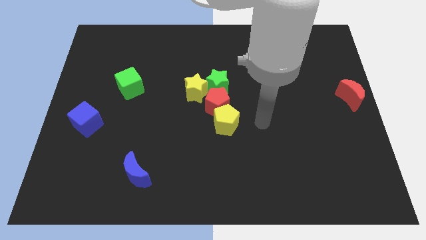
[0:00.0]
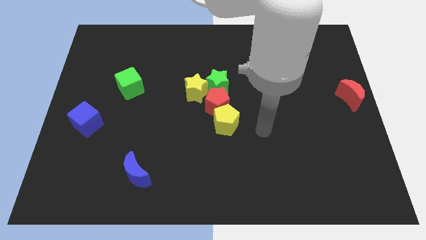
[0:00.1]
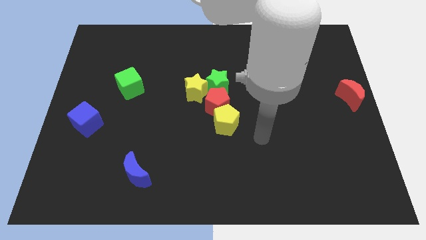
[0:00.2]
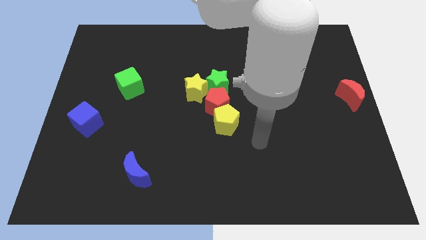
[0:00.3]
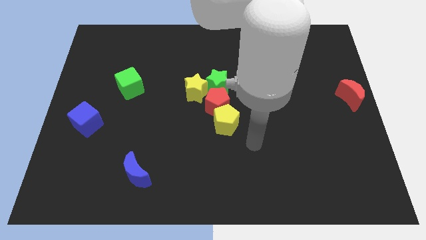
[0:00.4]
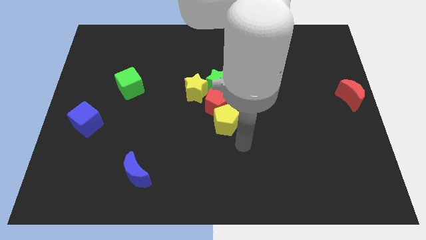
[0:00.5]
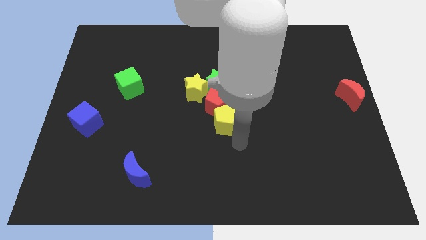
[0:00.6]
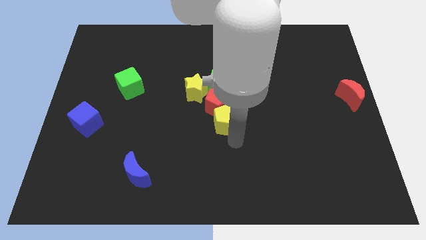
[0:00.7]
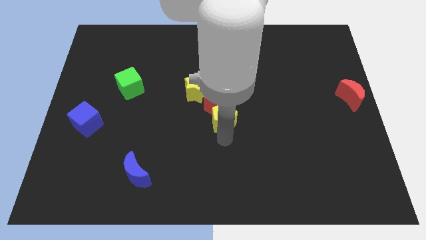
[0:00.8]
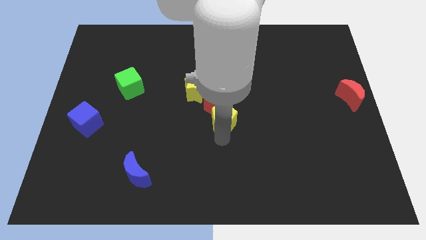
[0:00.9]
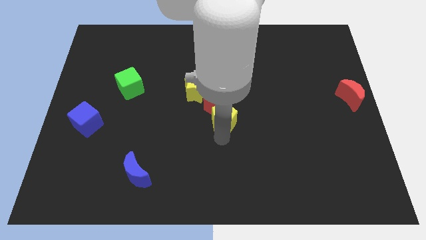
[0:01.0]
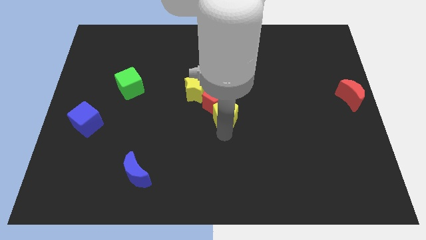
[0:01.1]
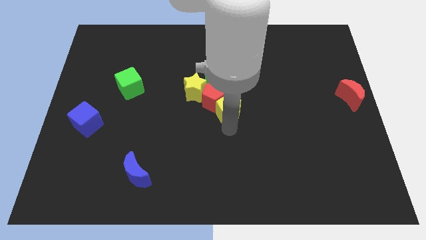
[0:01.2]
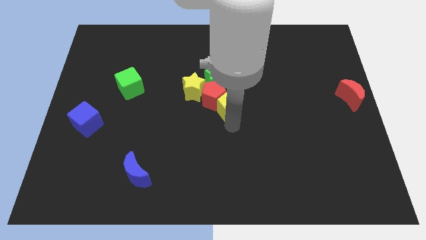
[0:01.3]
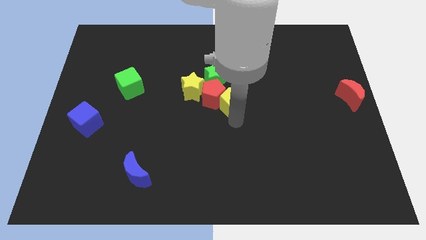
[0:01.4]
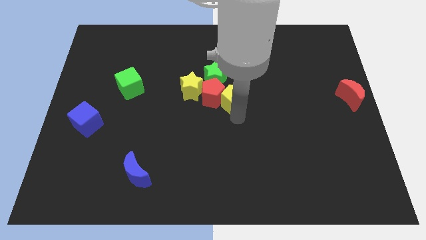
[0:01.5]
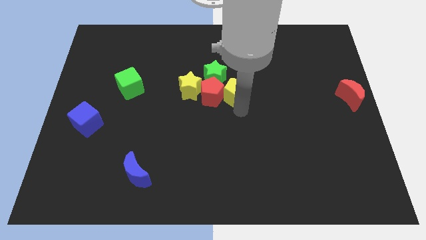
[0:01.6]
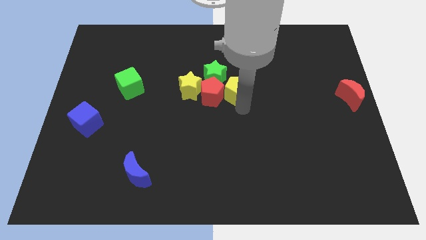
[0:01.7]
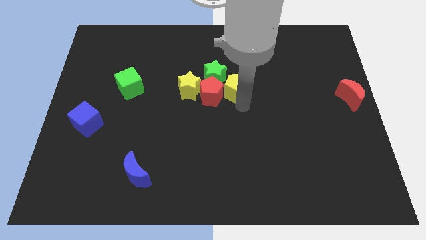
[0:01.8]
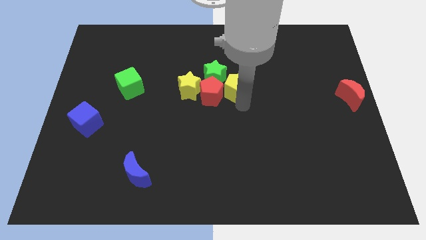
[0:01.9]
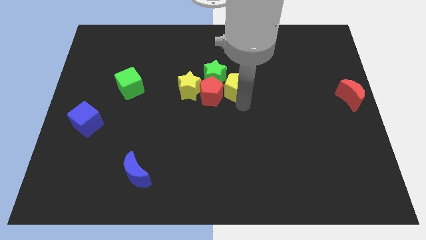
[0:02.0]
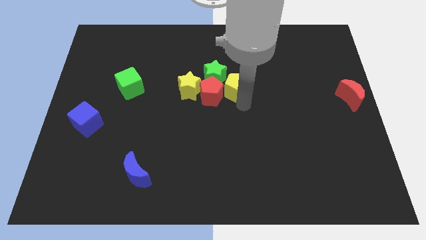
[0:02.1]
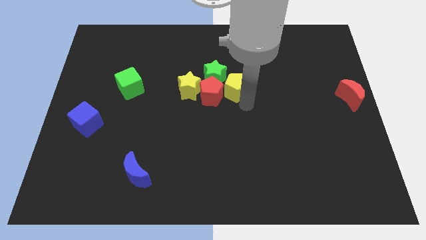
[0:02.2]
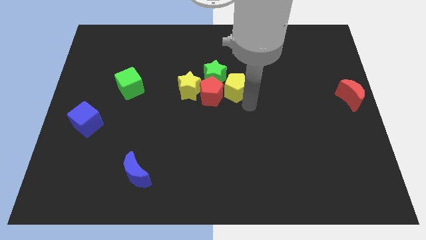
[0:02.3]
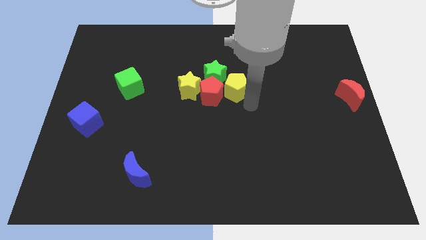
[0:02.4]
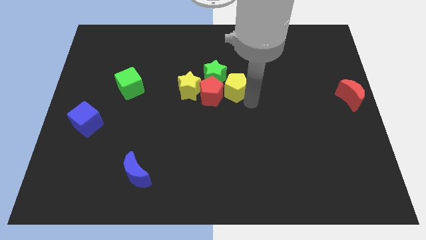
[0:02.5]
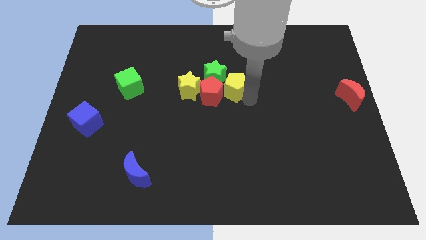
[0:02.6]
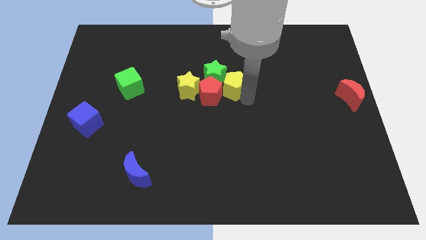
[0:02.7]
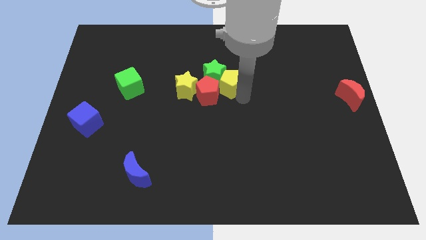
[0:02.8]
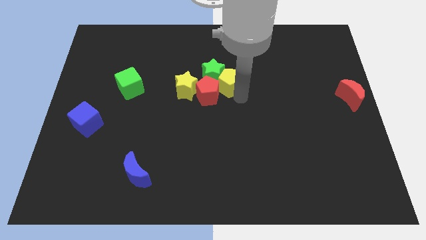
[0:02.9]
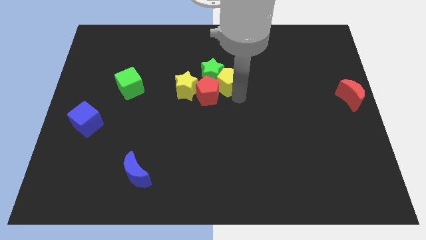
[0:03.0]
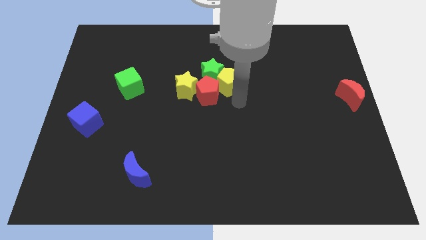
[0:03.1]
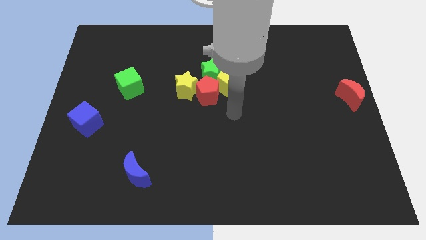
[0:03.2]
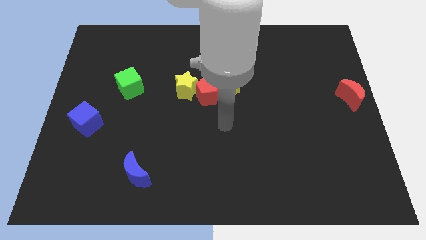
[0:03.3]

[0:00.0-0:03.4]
push the yellow pentagon to the right side of the red pentagon

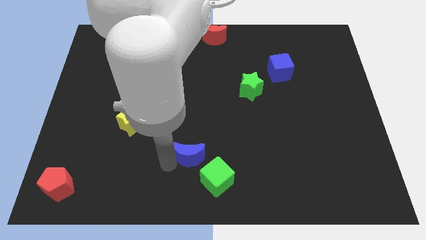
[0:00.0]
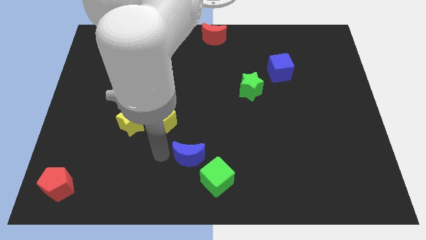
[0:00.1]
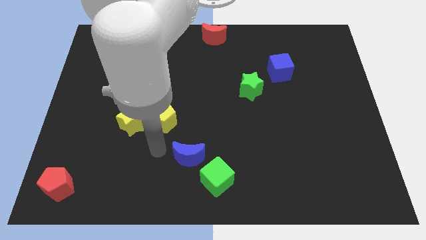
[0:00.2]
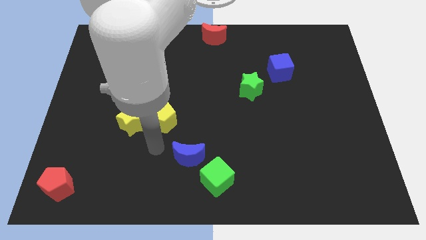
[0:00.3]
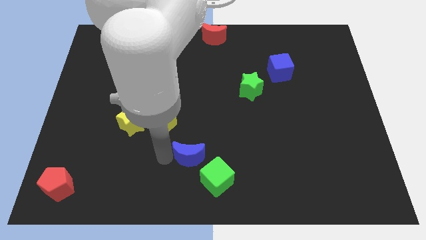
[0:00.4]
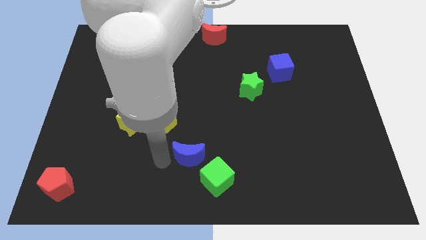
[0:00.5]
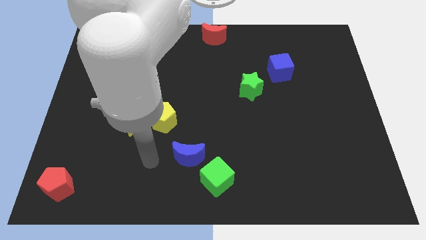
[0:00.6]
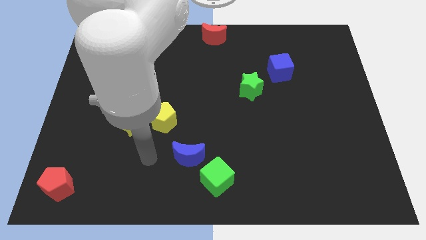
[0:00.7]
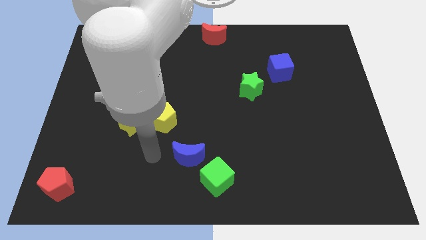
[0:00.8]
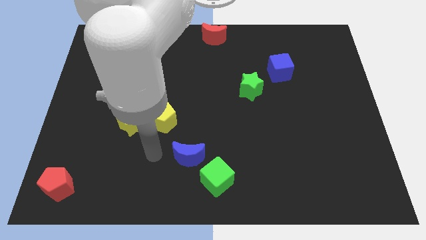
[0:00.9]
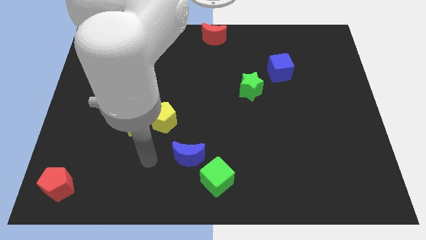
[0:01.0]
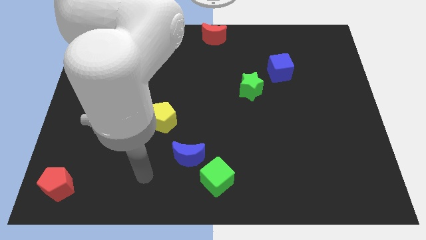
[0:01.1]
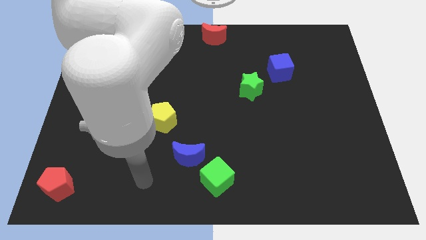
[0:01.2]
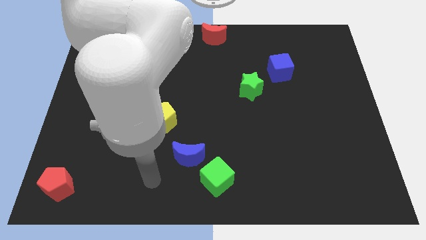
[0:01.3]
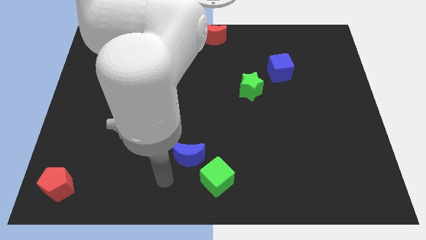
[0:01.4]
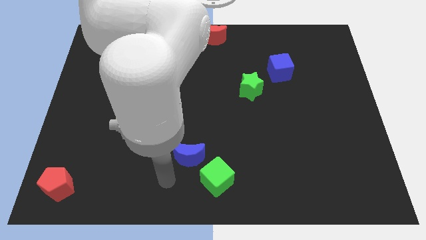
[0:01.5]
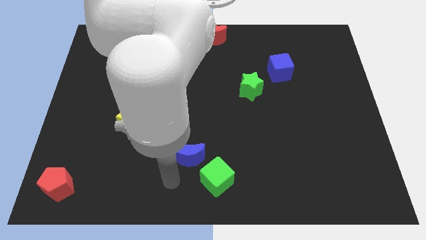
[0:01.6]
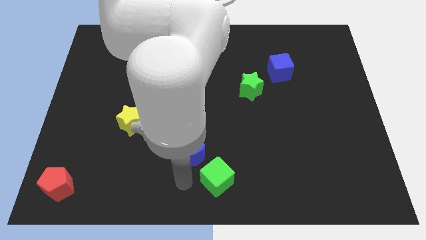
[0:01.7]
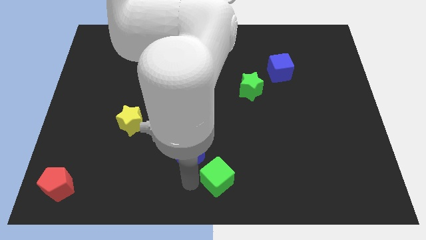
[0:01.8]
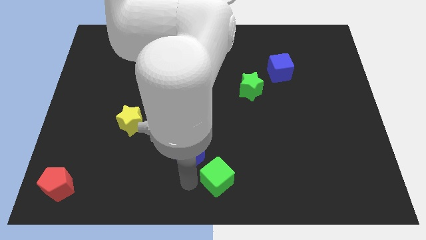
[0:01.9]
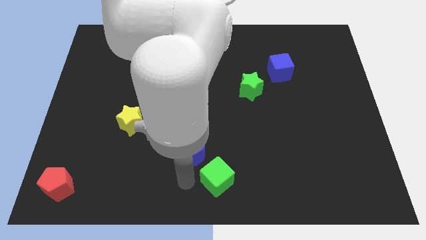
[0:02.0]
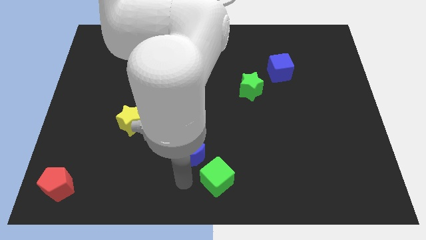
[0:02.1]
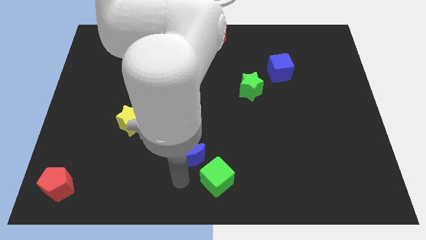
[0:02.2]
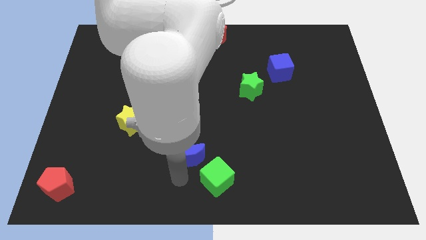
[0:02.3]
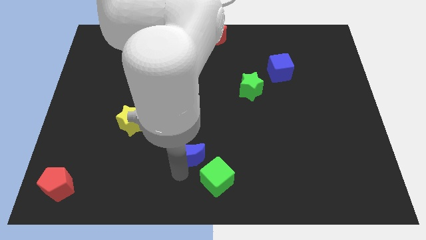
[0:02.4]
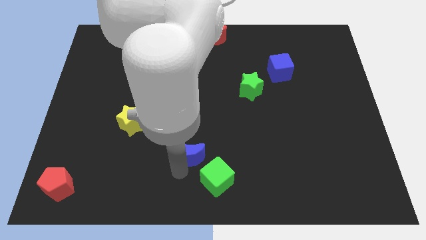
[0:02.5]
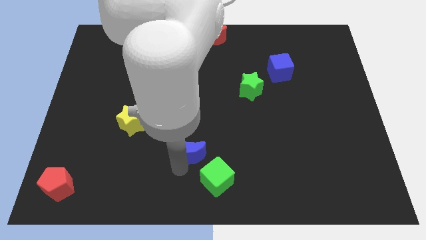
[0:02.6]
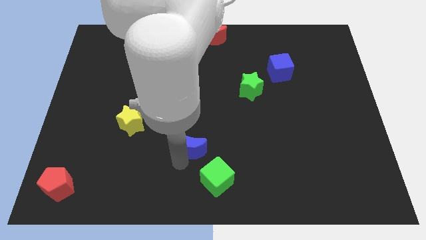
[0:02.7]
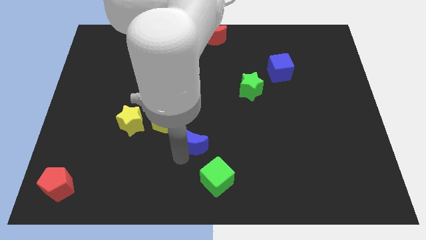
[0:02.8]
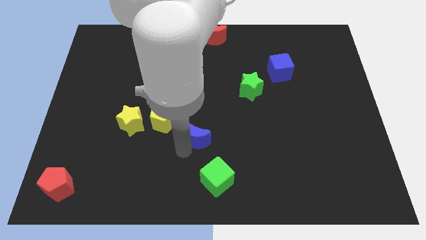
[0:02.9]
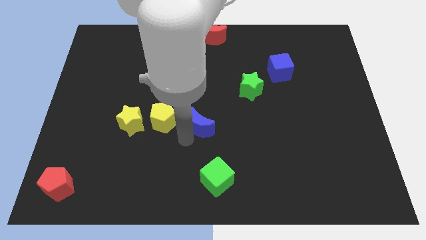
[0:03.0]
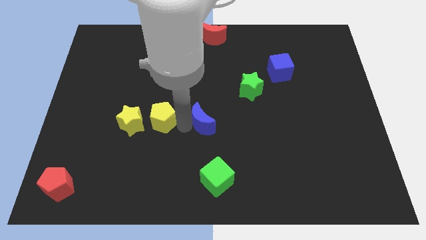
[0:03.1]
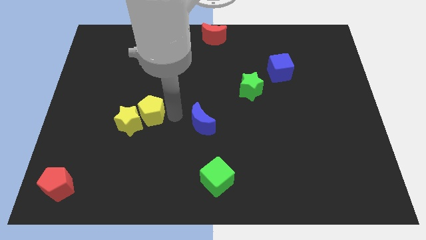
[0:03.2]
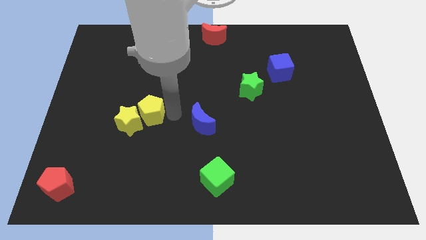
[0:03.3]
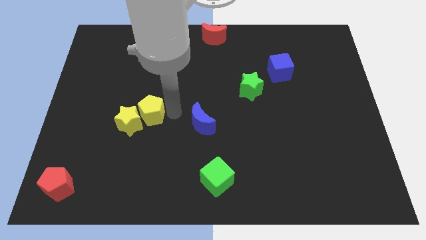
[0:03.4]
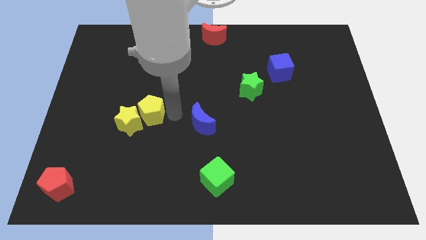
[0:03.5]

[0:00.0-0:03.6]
push the blue crescent above green star

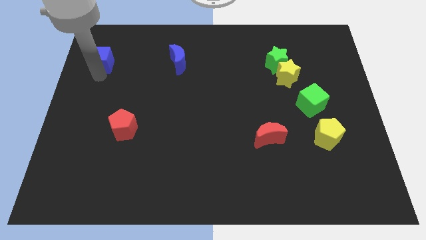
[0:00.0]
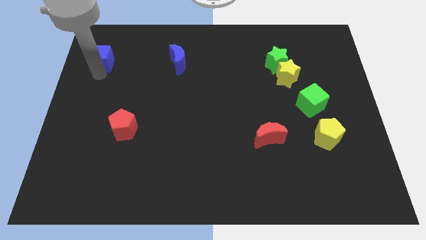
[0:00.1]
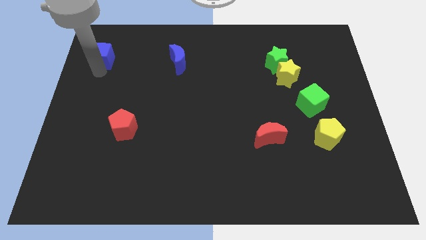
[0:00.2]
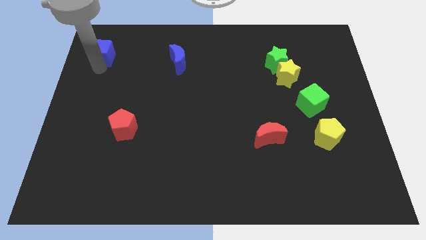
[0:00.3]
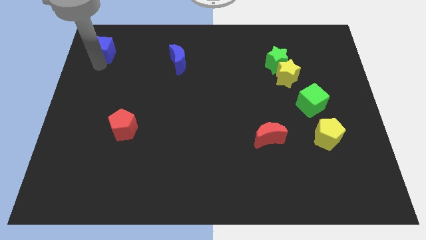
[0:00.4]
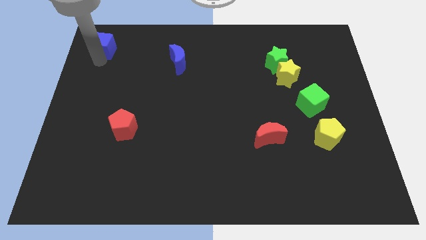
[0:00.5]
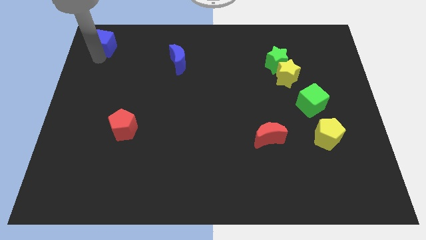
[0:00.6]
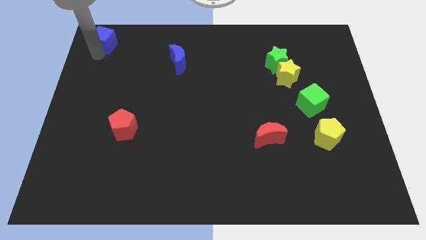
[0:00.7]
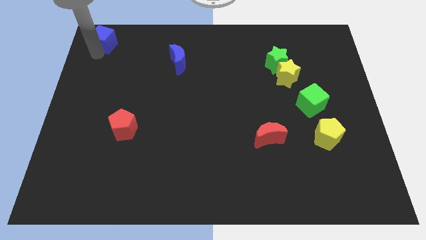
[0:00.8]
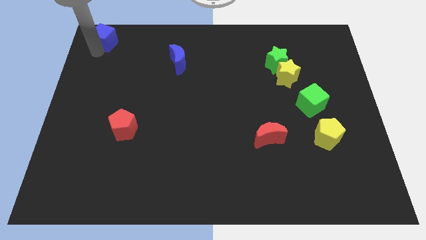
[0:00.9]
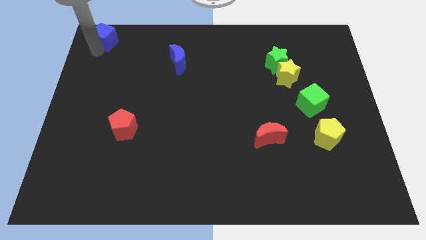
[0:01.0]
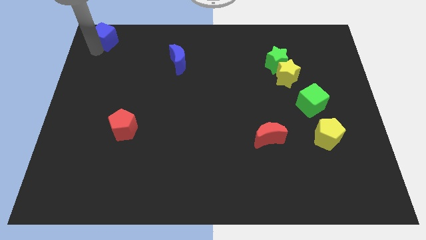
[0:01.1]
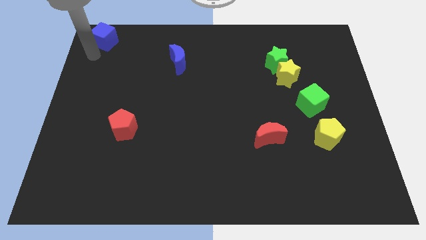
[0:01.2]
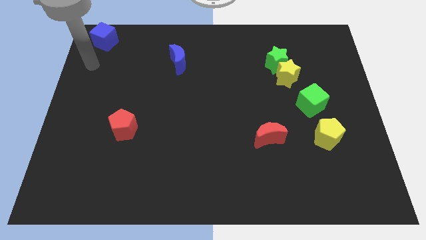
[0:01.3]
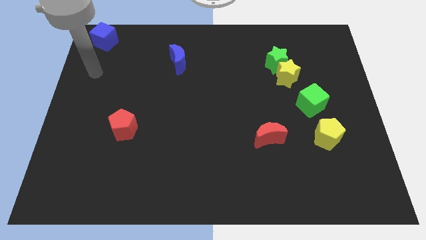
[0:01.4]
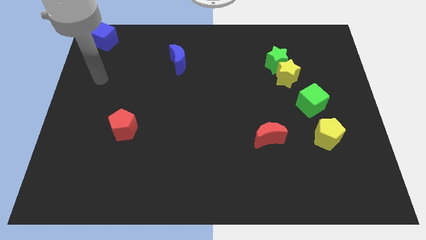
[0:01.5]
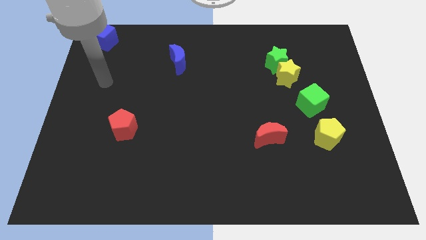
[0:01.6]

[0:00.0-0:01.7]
push the blue cube to the top left corner

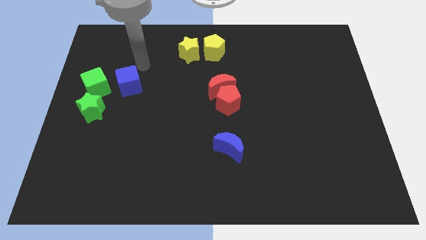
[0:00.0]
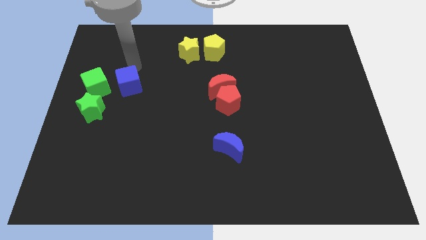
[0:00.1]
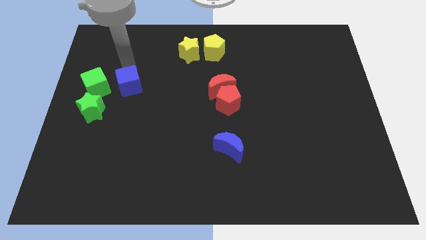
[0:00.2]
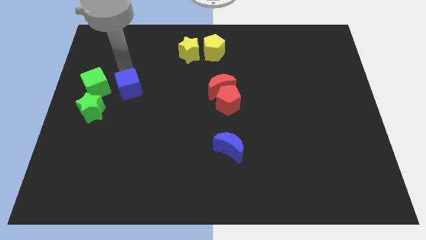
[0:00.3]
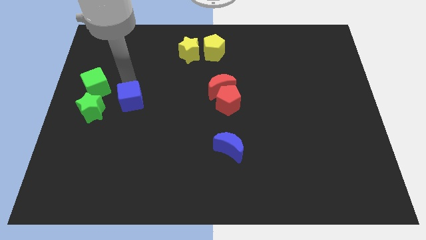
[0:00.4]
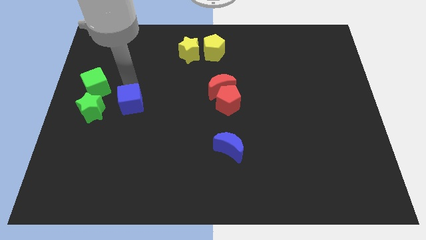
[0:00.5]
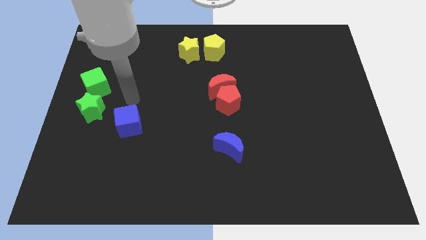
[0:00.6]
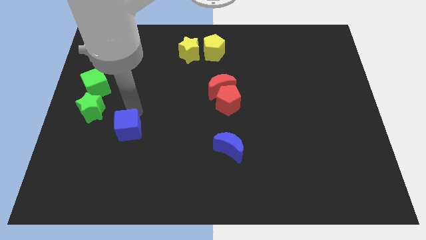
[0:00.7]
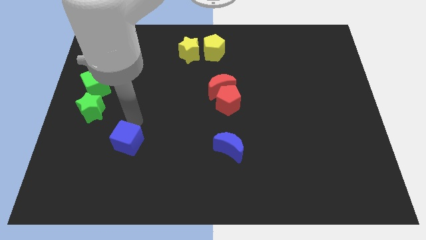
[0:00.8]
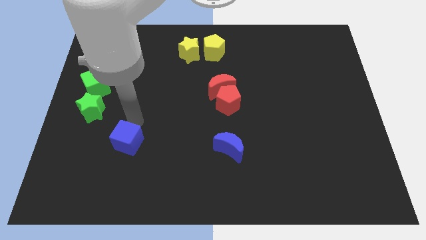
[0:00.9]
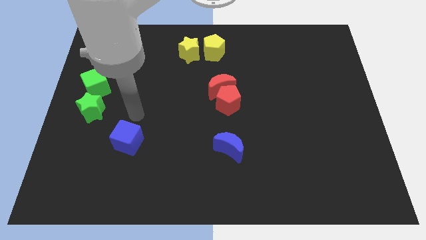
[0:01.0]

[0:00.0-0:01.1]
push the blue cube to the horizontal left side of the blue moon
